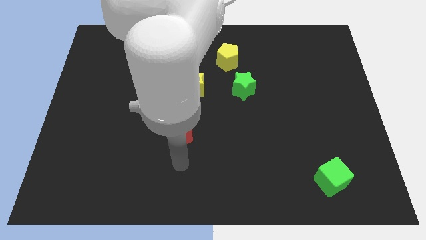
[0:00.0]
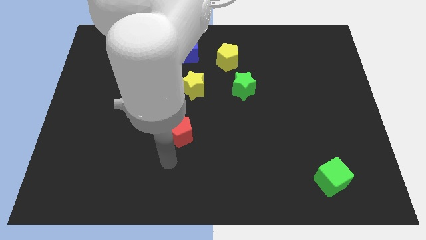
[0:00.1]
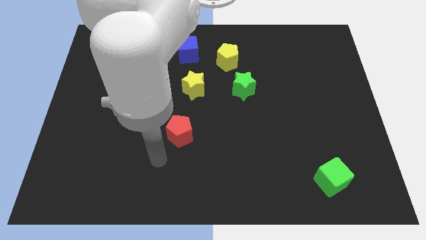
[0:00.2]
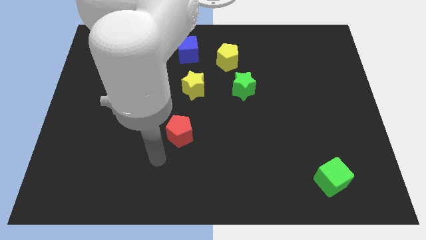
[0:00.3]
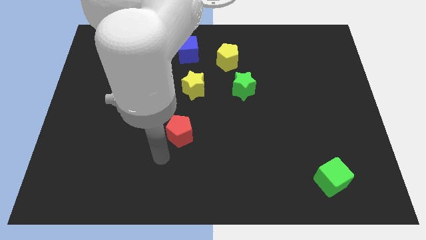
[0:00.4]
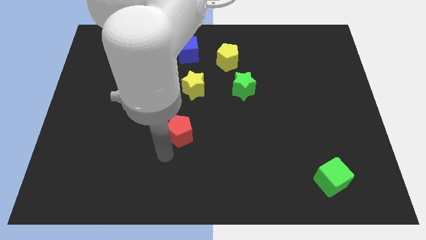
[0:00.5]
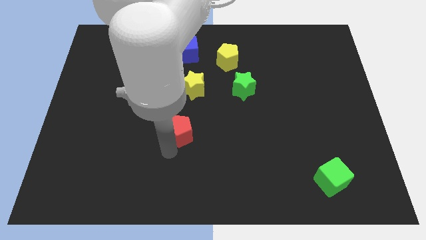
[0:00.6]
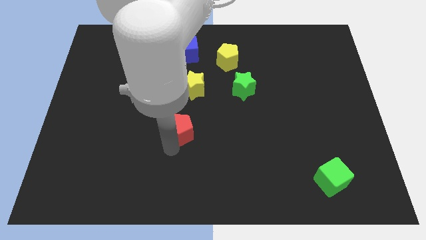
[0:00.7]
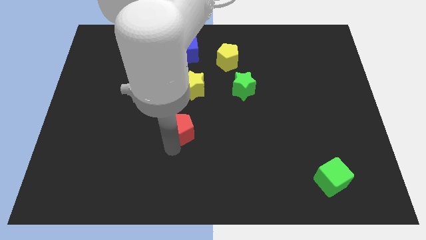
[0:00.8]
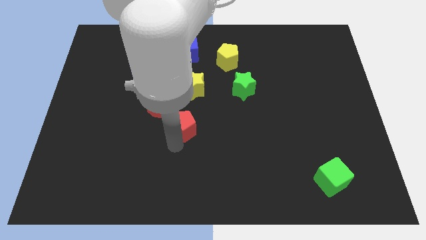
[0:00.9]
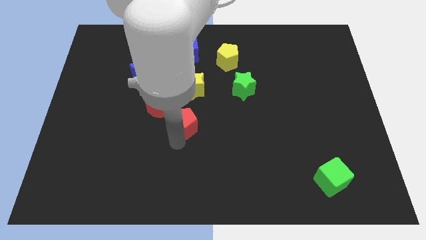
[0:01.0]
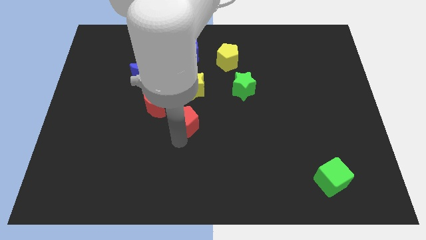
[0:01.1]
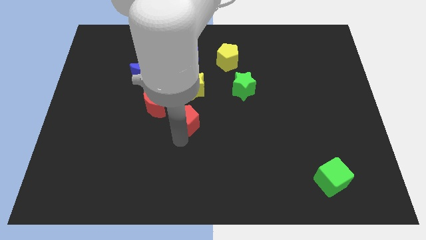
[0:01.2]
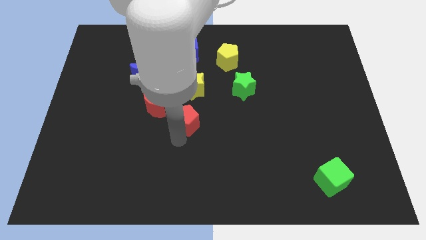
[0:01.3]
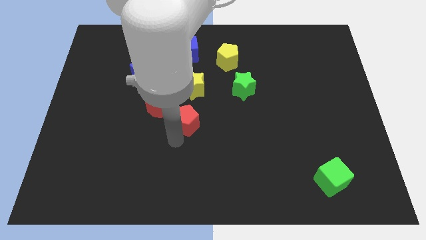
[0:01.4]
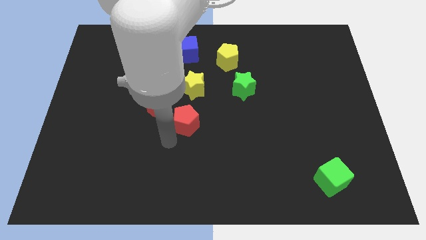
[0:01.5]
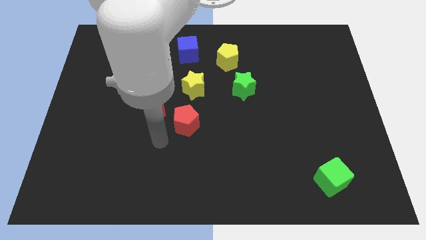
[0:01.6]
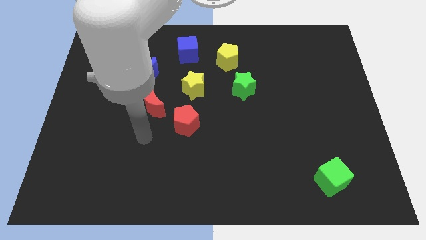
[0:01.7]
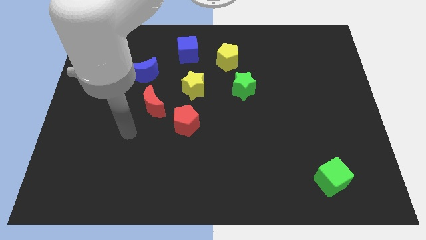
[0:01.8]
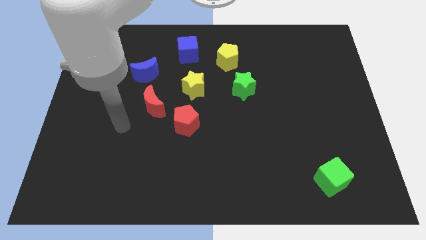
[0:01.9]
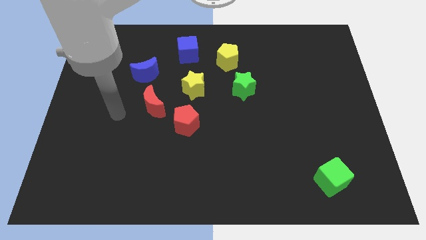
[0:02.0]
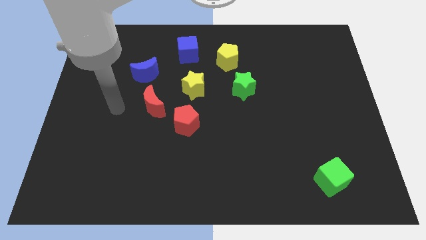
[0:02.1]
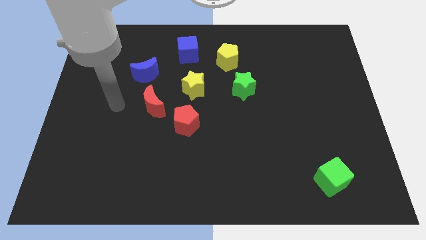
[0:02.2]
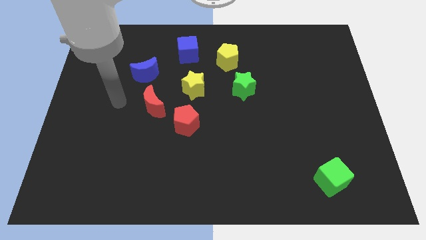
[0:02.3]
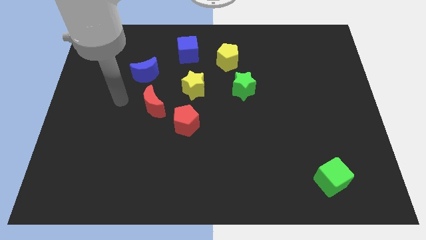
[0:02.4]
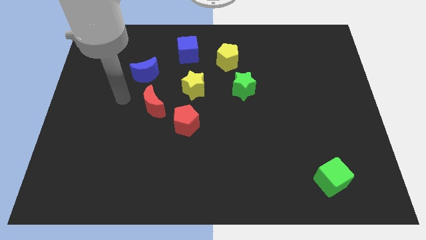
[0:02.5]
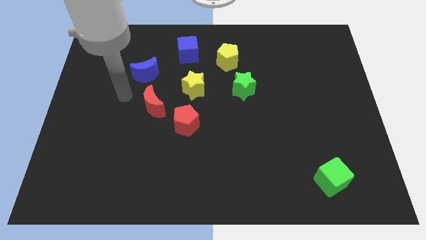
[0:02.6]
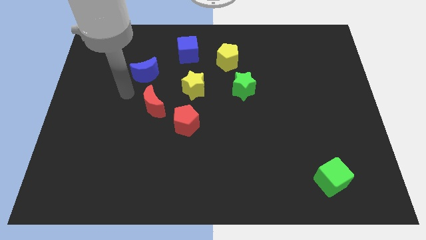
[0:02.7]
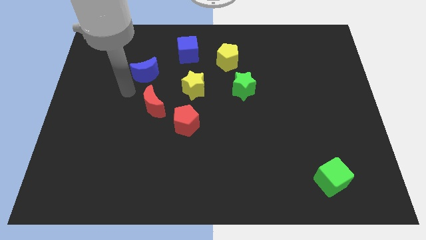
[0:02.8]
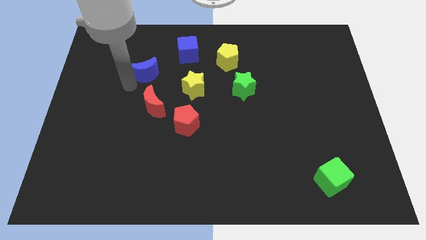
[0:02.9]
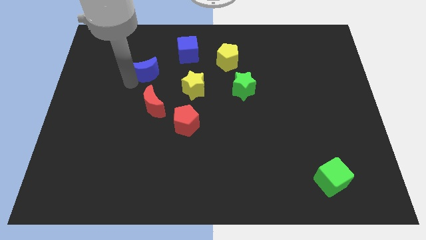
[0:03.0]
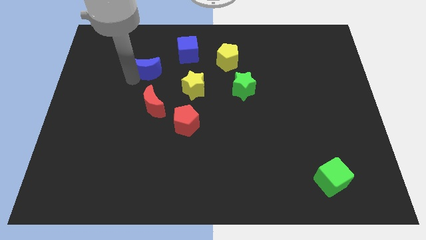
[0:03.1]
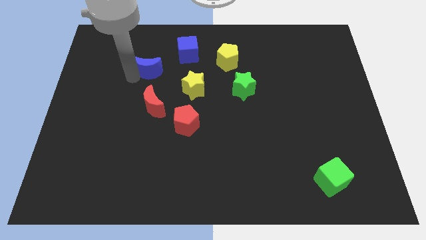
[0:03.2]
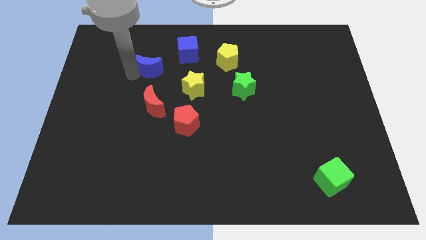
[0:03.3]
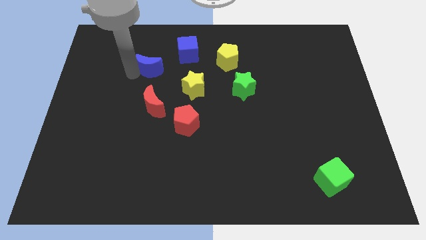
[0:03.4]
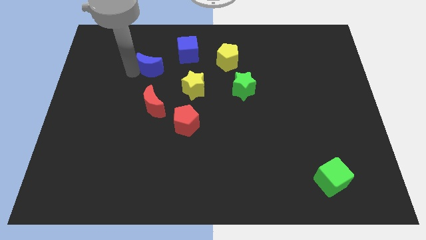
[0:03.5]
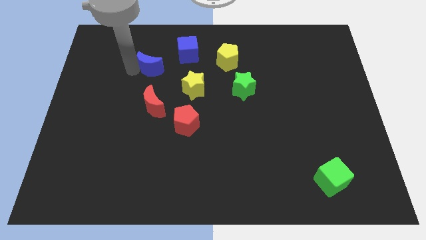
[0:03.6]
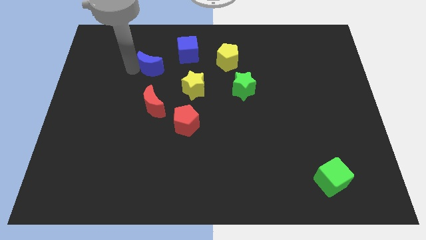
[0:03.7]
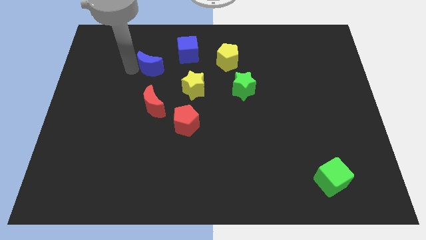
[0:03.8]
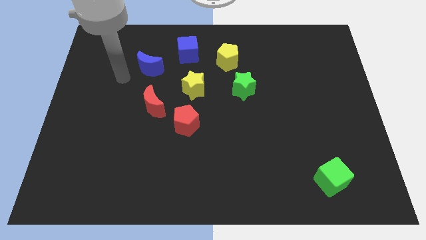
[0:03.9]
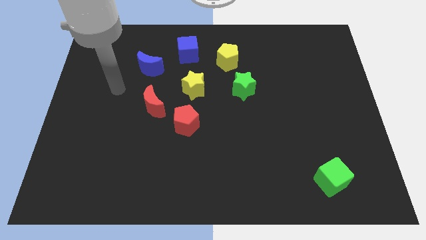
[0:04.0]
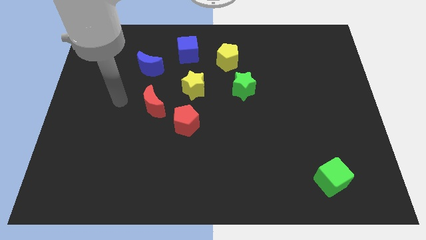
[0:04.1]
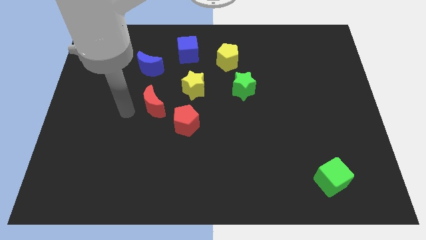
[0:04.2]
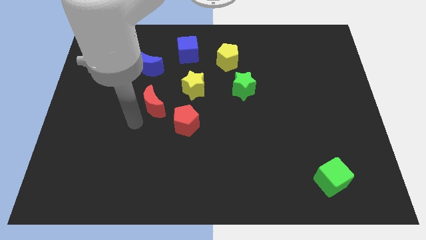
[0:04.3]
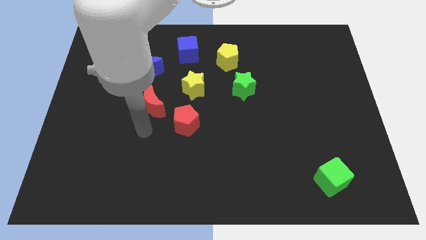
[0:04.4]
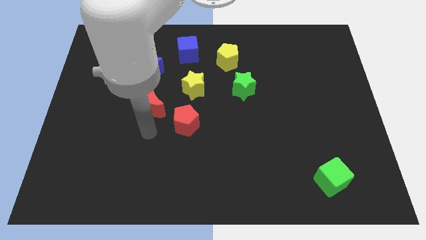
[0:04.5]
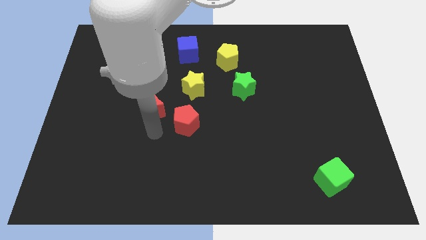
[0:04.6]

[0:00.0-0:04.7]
place the red moon red pentagon towards yellow star

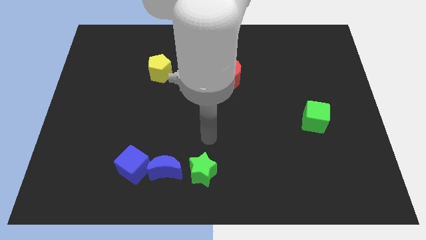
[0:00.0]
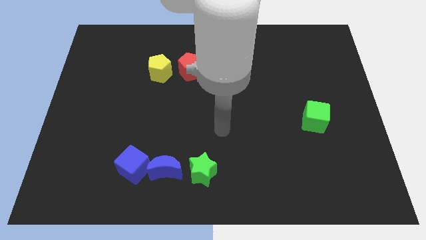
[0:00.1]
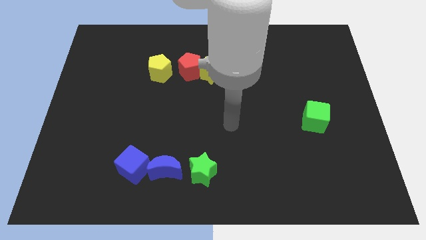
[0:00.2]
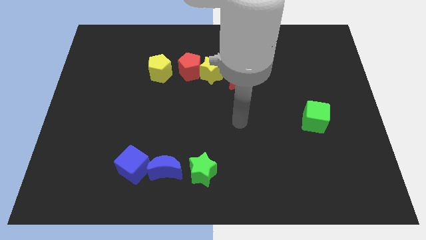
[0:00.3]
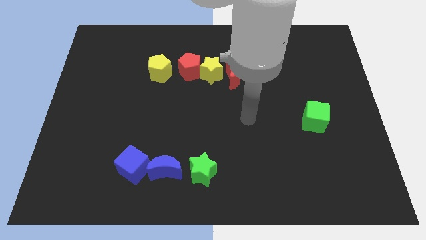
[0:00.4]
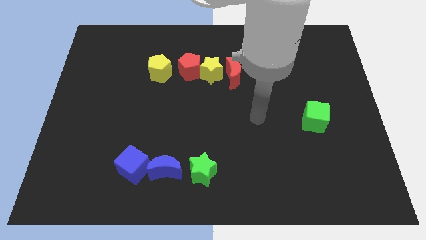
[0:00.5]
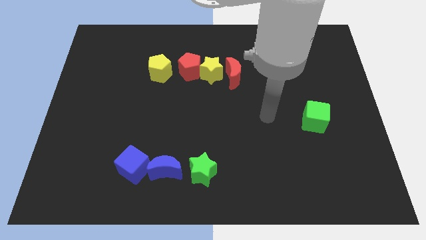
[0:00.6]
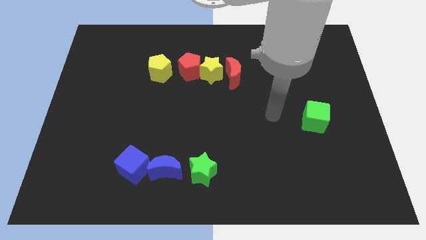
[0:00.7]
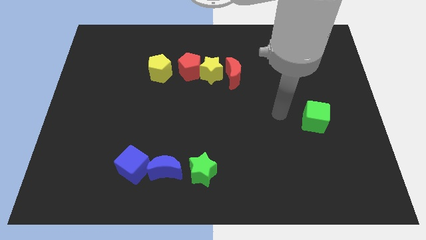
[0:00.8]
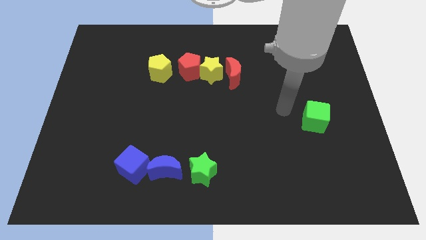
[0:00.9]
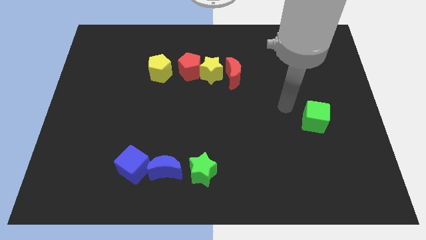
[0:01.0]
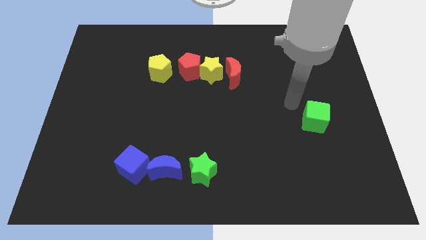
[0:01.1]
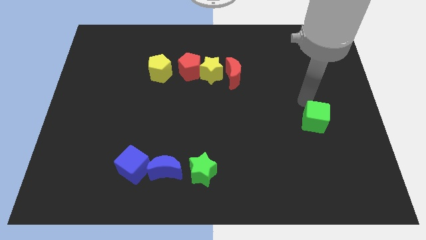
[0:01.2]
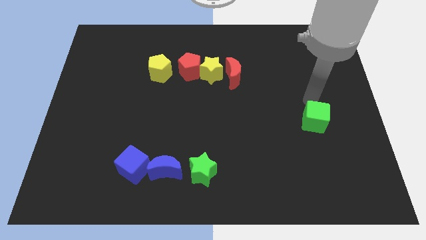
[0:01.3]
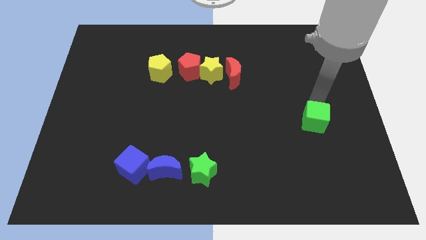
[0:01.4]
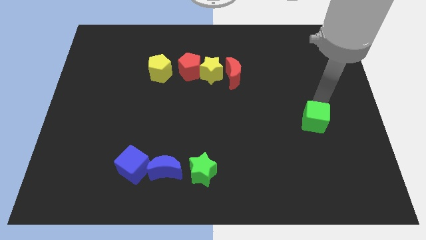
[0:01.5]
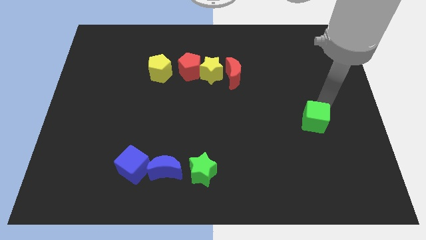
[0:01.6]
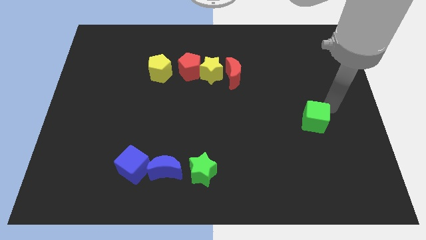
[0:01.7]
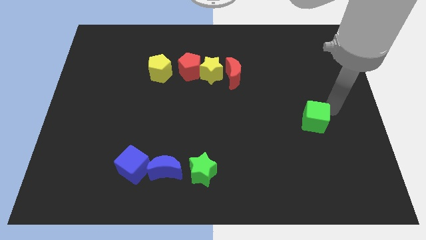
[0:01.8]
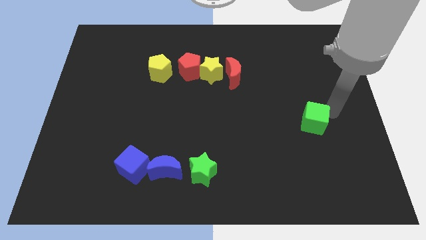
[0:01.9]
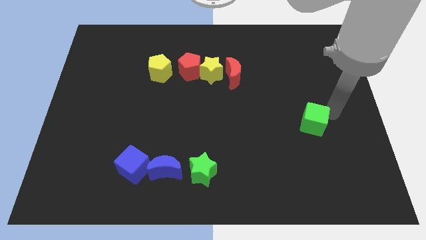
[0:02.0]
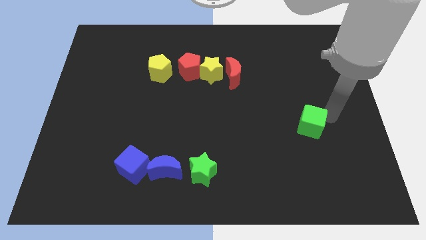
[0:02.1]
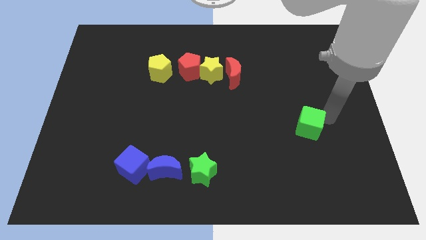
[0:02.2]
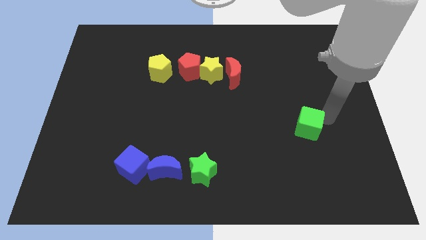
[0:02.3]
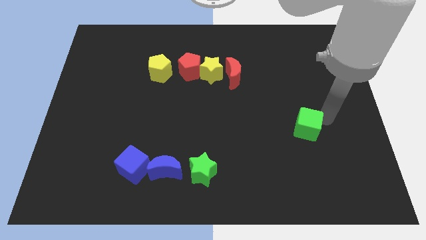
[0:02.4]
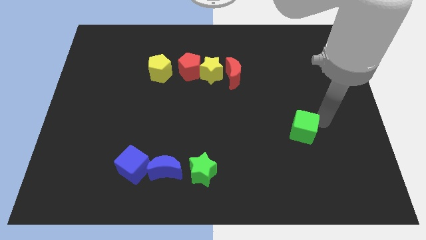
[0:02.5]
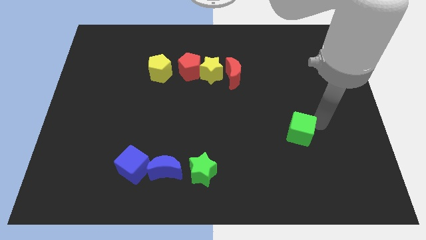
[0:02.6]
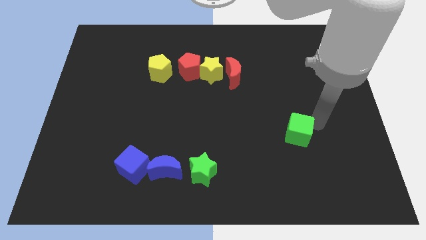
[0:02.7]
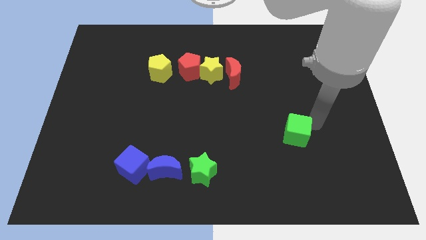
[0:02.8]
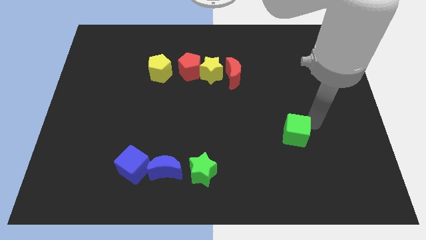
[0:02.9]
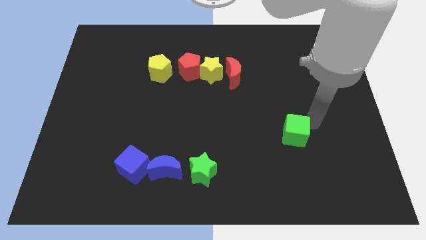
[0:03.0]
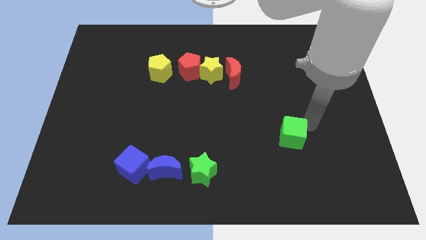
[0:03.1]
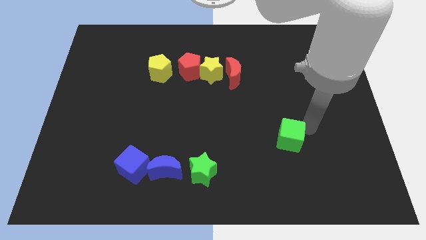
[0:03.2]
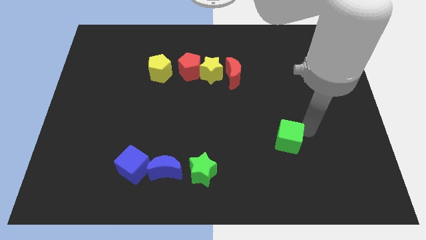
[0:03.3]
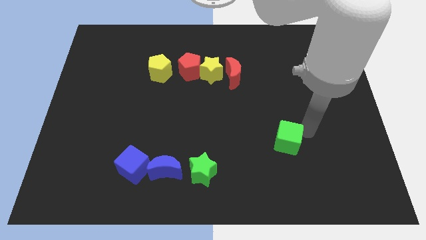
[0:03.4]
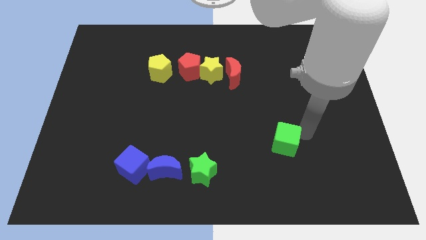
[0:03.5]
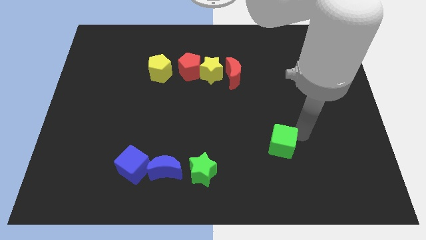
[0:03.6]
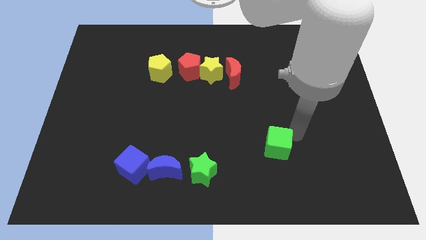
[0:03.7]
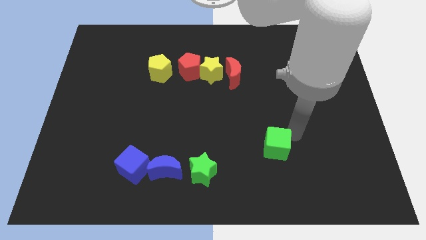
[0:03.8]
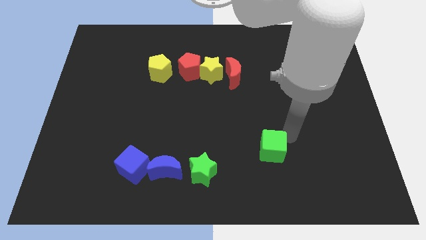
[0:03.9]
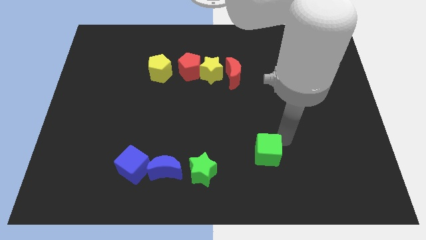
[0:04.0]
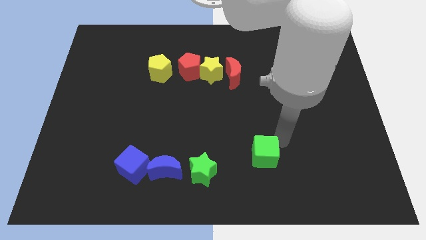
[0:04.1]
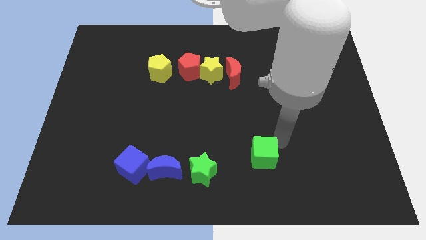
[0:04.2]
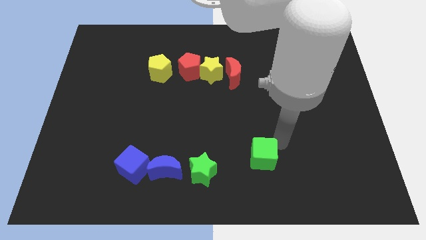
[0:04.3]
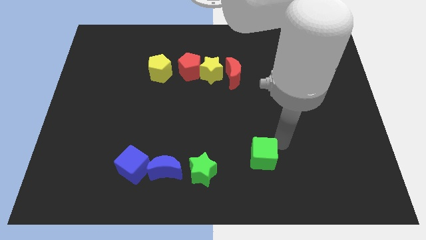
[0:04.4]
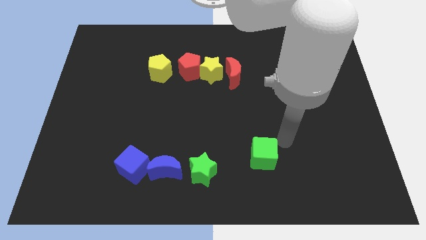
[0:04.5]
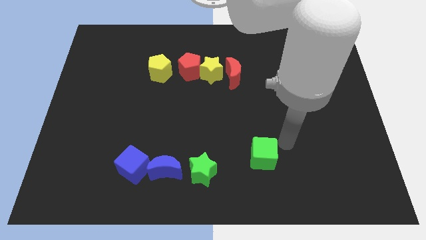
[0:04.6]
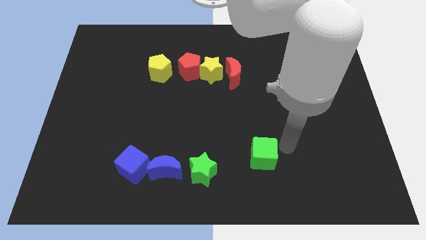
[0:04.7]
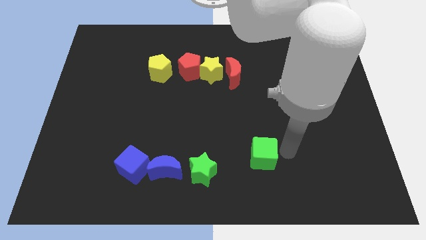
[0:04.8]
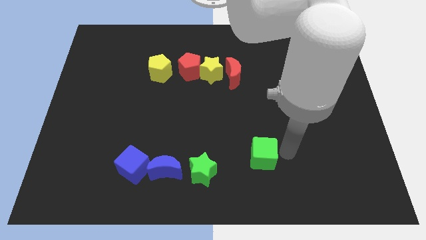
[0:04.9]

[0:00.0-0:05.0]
move the green cube towards the green star
